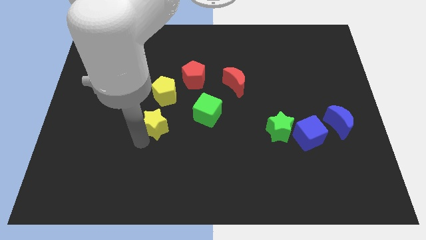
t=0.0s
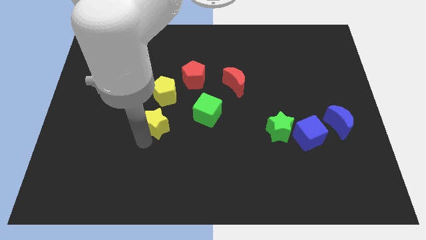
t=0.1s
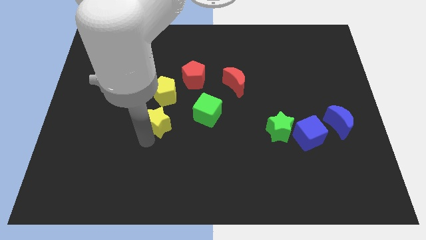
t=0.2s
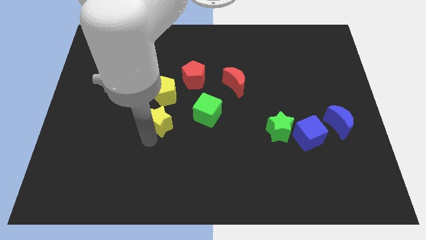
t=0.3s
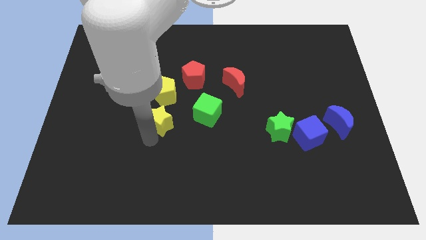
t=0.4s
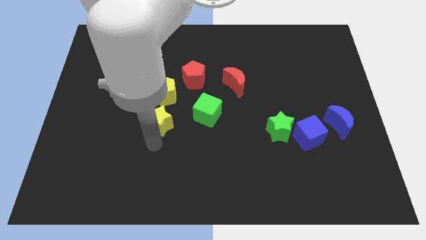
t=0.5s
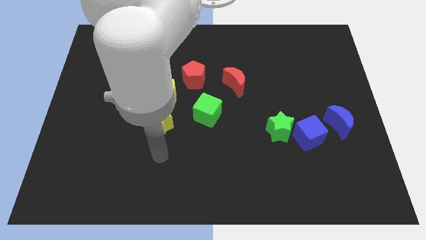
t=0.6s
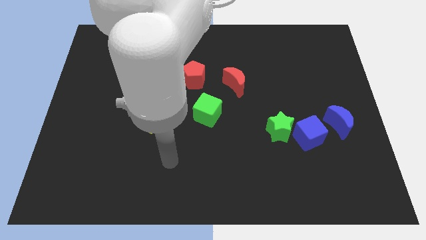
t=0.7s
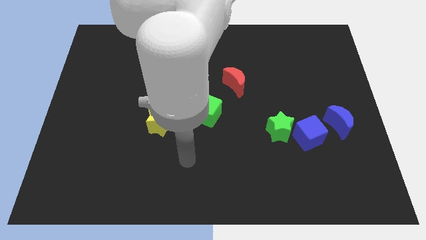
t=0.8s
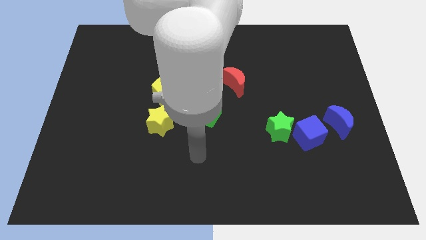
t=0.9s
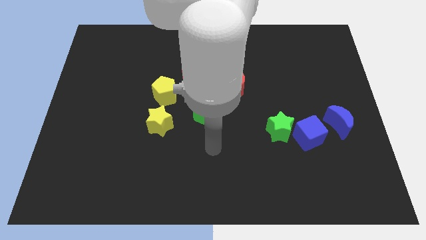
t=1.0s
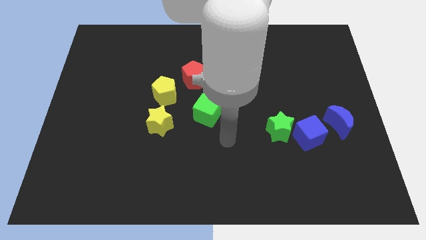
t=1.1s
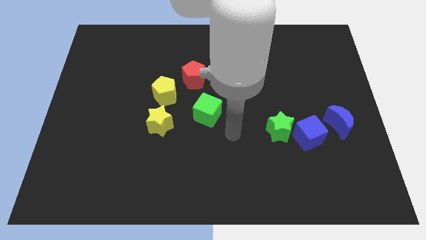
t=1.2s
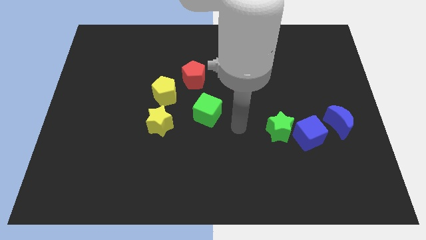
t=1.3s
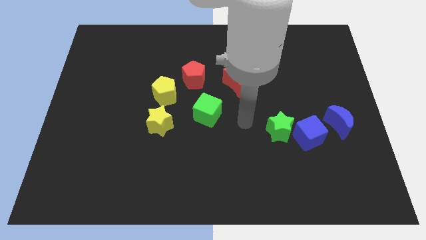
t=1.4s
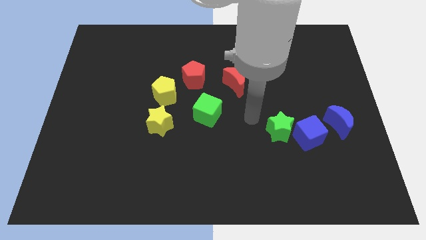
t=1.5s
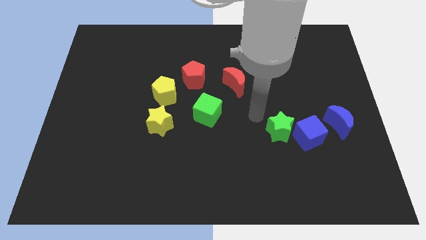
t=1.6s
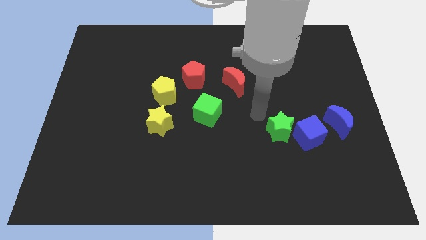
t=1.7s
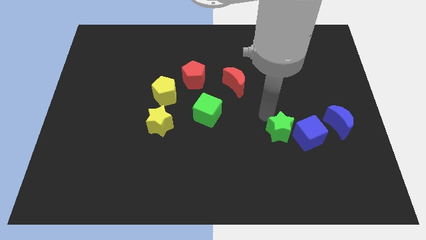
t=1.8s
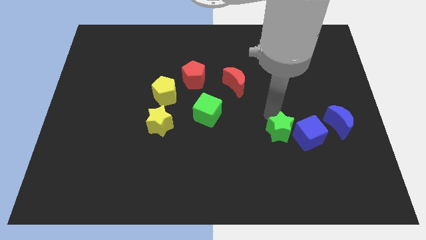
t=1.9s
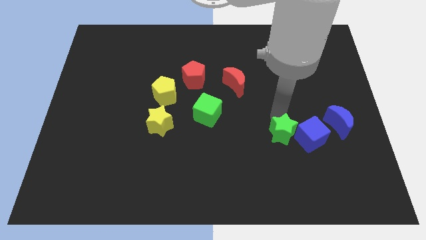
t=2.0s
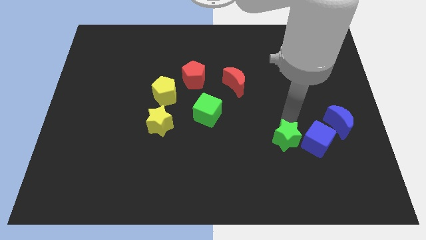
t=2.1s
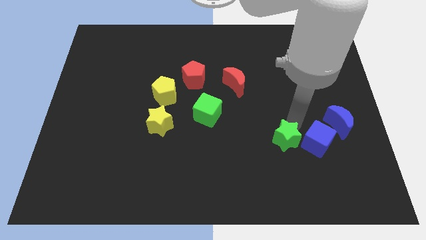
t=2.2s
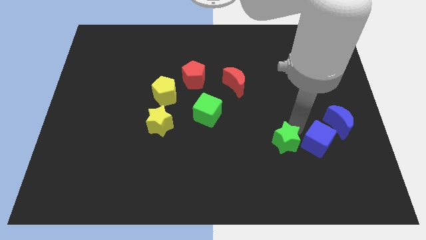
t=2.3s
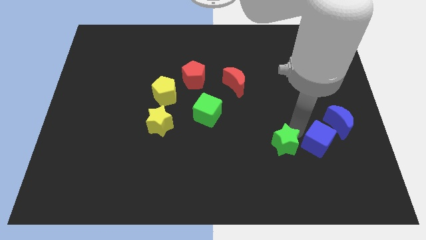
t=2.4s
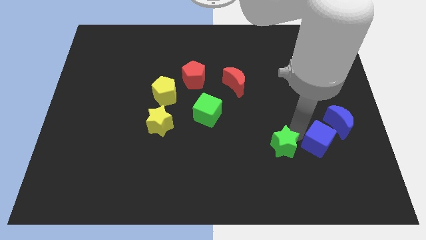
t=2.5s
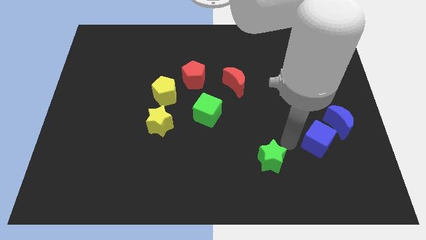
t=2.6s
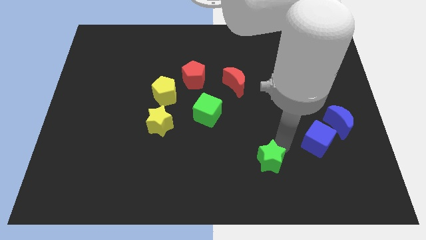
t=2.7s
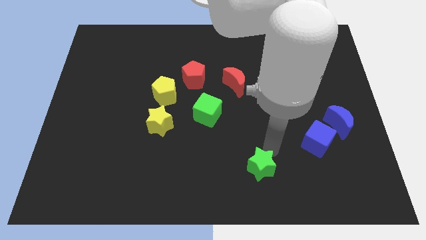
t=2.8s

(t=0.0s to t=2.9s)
move green star to the bottom center

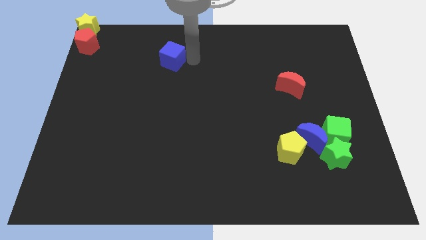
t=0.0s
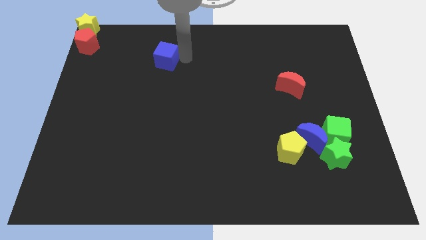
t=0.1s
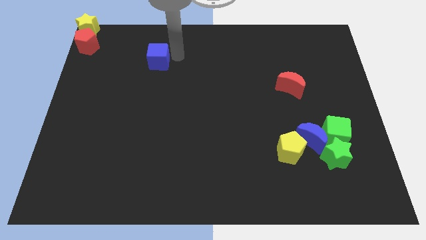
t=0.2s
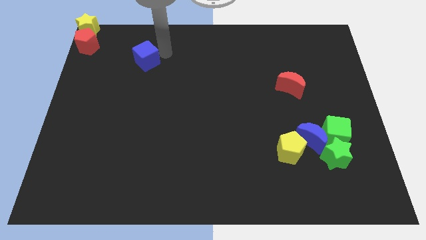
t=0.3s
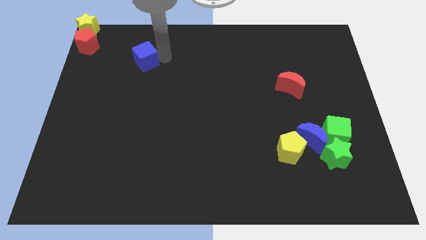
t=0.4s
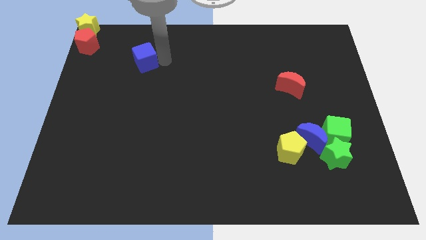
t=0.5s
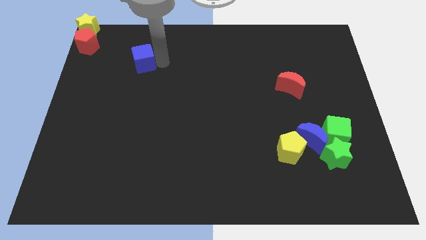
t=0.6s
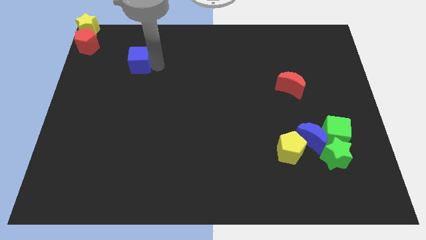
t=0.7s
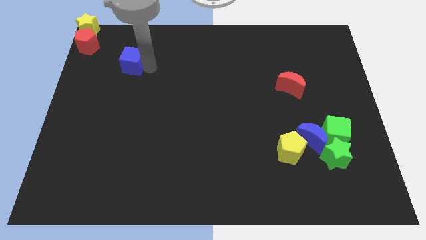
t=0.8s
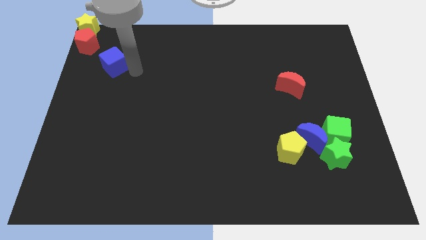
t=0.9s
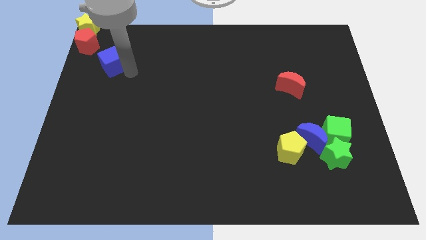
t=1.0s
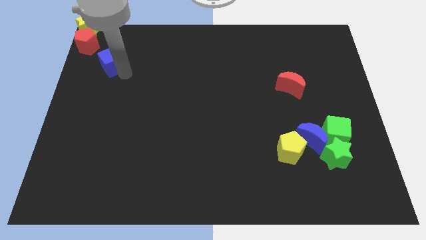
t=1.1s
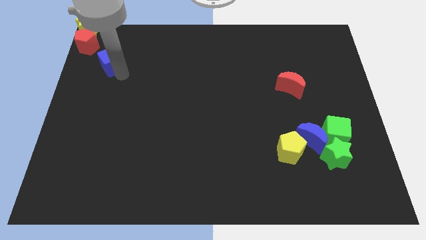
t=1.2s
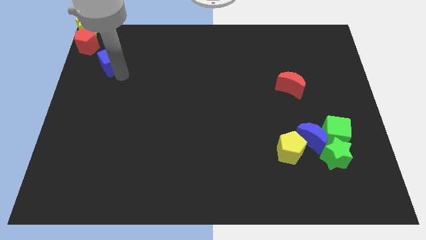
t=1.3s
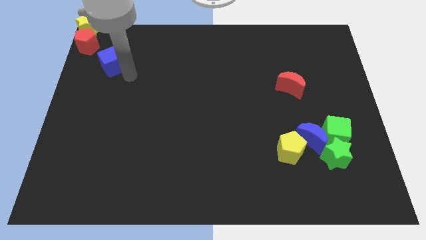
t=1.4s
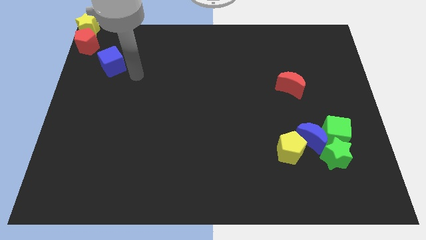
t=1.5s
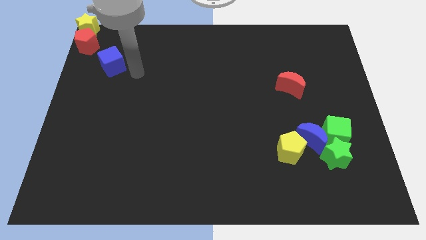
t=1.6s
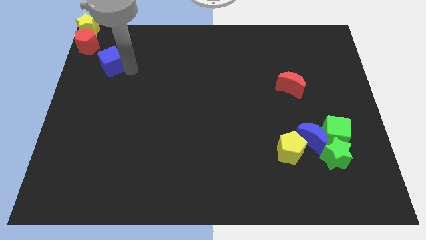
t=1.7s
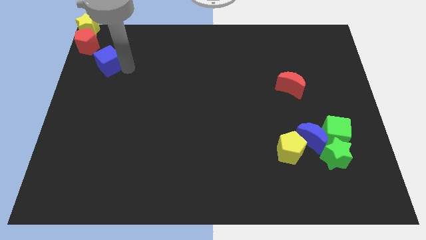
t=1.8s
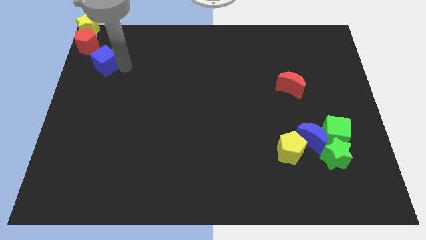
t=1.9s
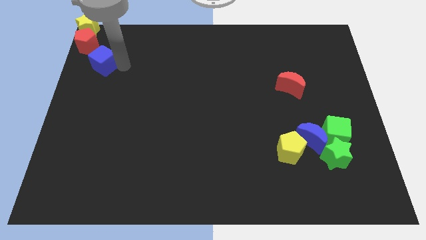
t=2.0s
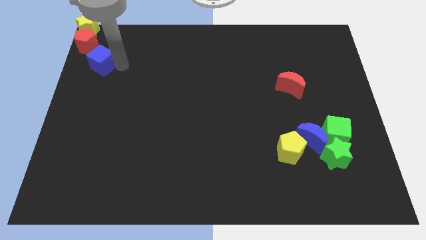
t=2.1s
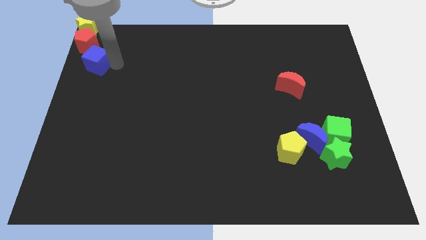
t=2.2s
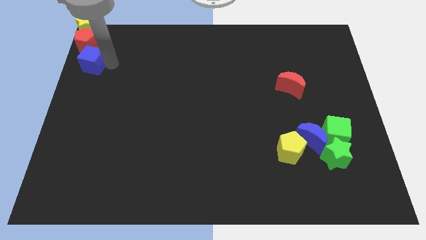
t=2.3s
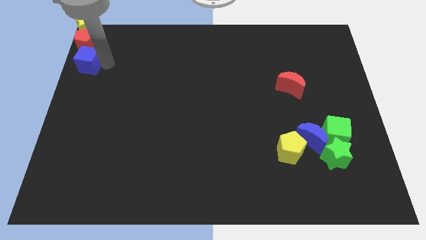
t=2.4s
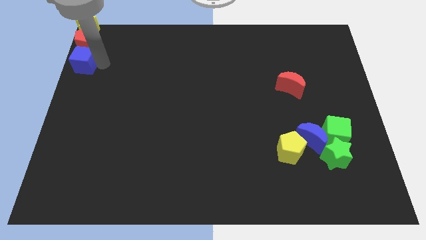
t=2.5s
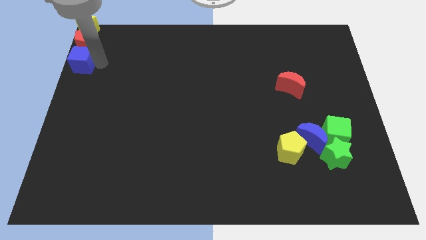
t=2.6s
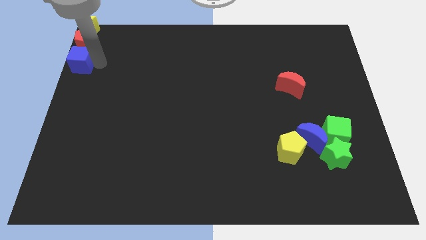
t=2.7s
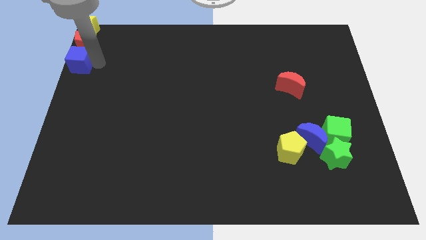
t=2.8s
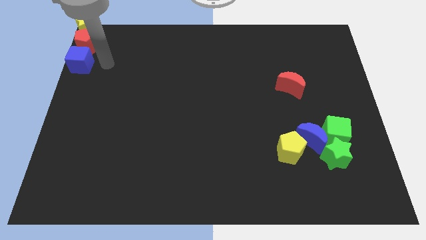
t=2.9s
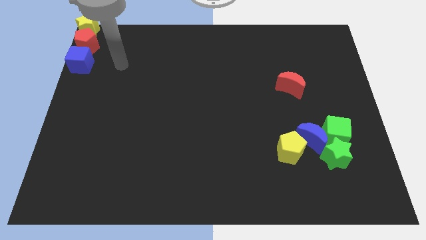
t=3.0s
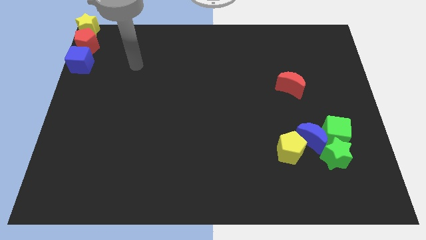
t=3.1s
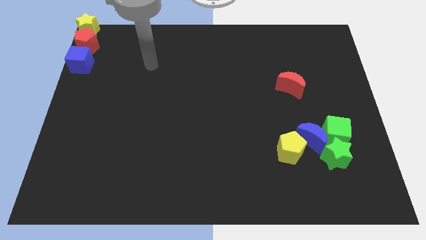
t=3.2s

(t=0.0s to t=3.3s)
move the blue cube below the red pentagon

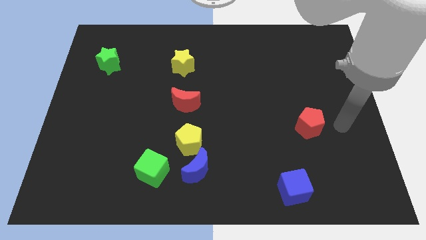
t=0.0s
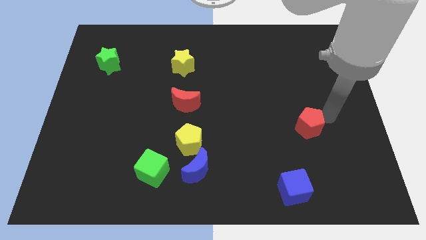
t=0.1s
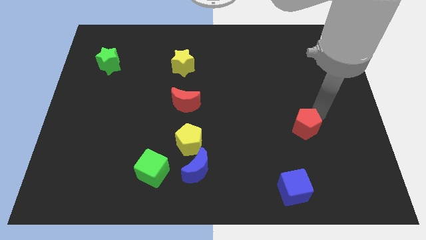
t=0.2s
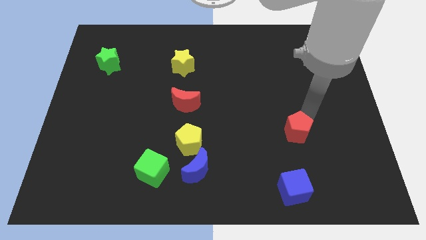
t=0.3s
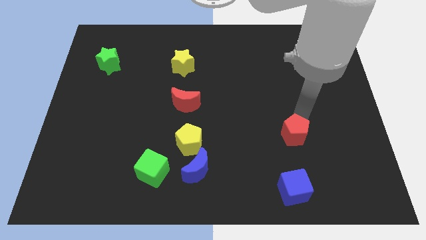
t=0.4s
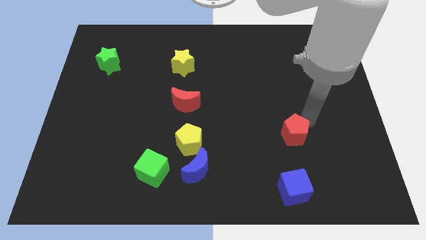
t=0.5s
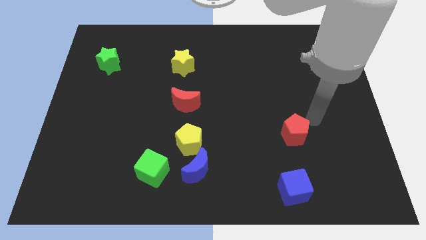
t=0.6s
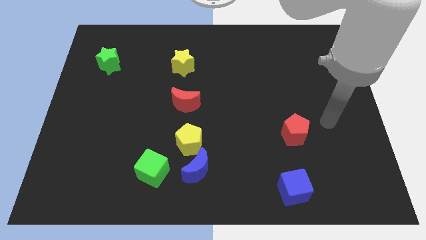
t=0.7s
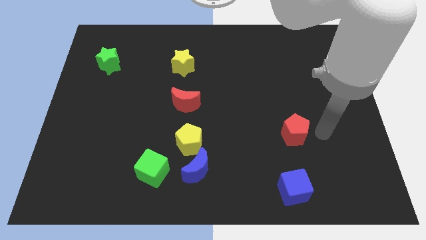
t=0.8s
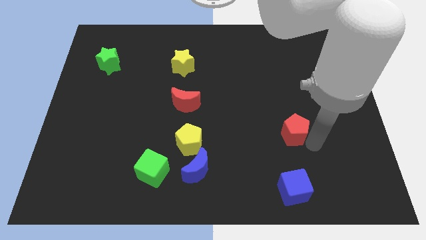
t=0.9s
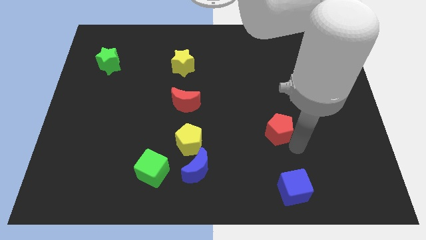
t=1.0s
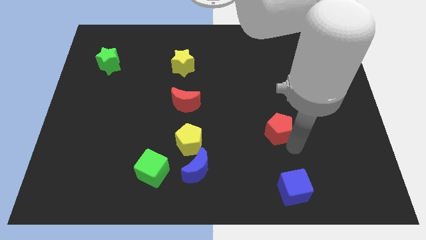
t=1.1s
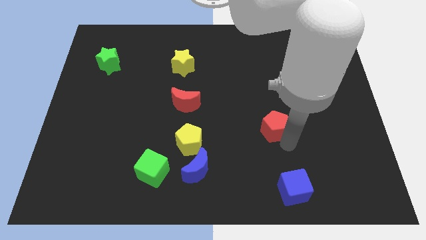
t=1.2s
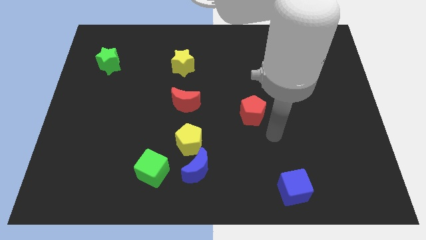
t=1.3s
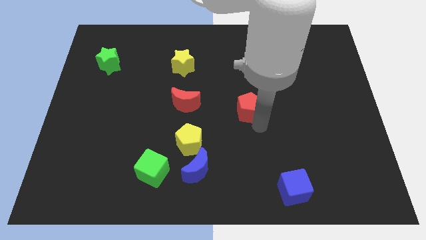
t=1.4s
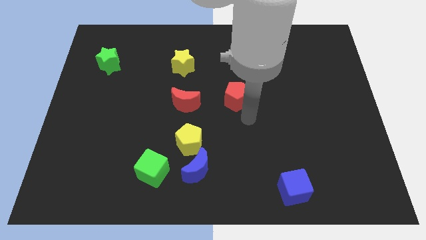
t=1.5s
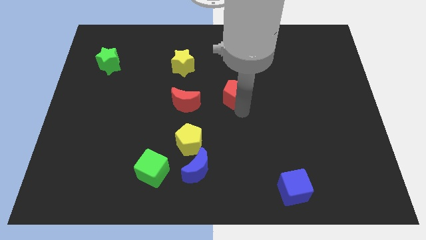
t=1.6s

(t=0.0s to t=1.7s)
push the red pentagon horizontally to the right side of the red crescent

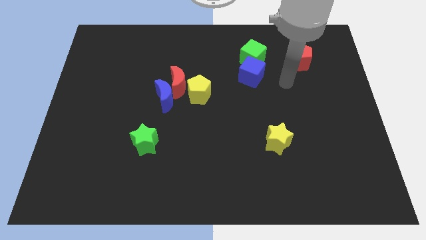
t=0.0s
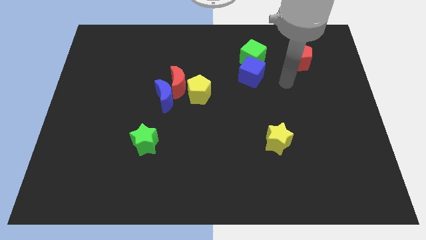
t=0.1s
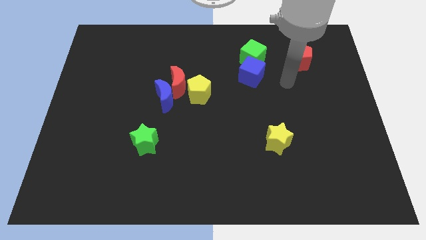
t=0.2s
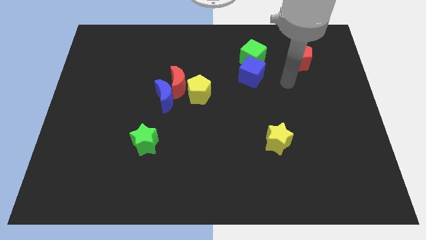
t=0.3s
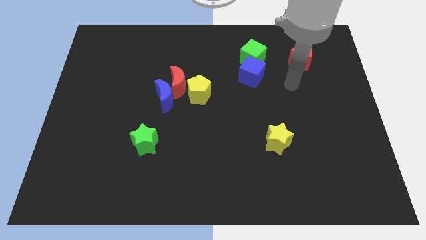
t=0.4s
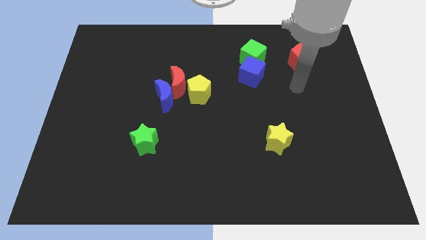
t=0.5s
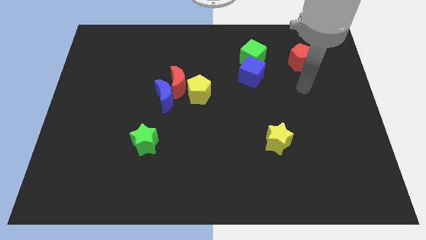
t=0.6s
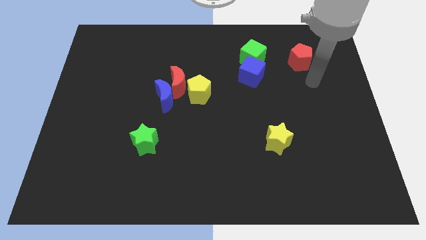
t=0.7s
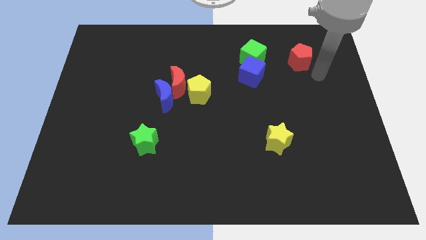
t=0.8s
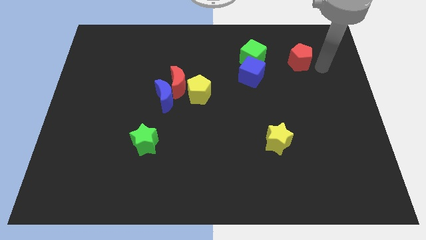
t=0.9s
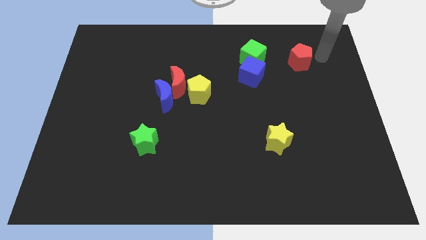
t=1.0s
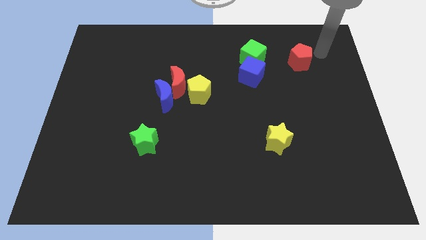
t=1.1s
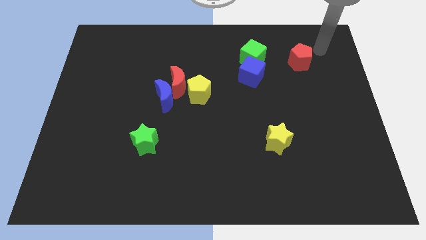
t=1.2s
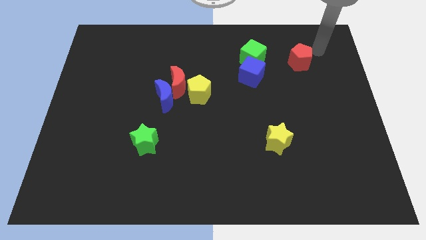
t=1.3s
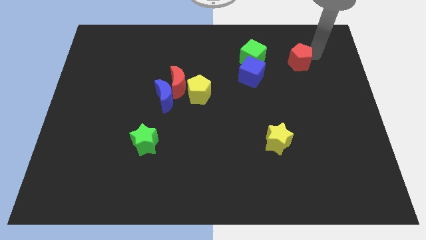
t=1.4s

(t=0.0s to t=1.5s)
put your hand to the right of the green cube
